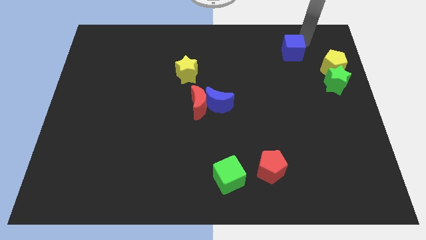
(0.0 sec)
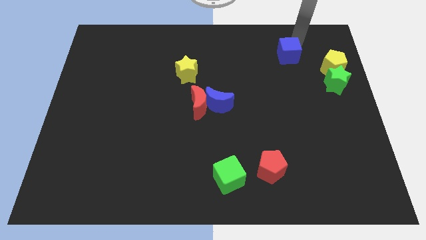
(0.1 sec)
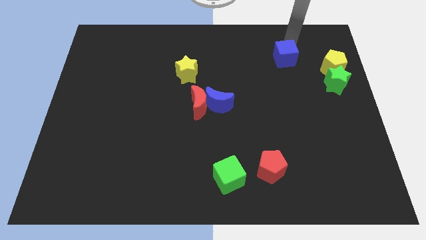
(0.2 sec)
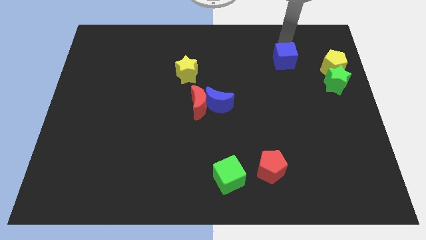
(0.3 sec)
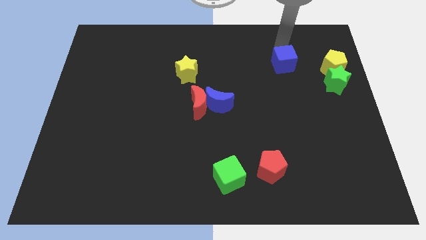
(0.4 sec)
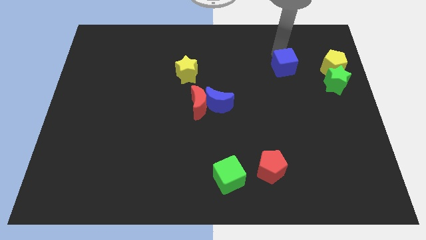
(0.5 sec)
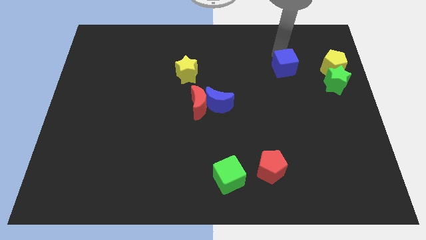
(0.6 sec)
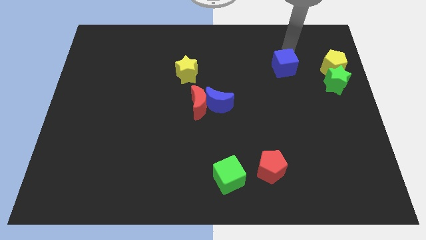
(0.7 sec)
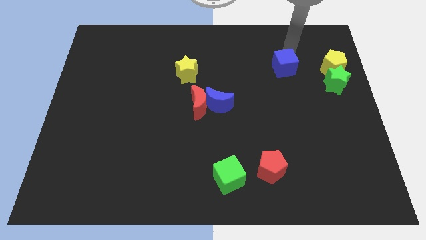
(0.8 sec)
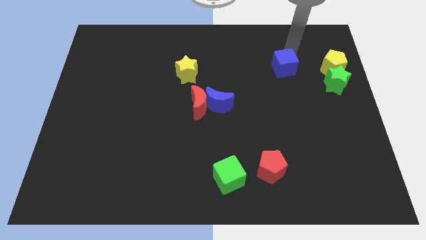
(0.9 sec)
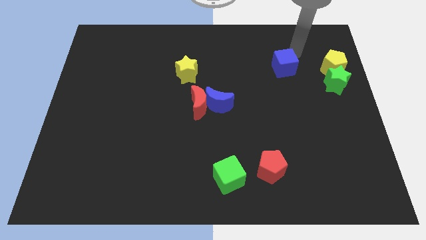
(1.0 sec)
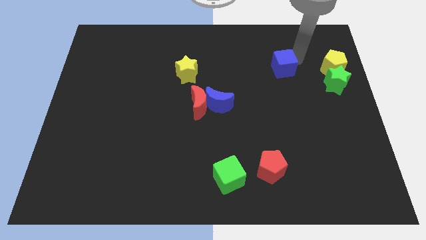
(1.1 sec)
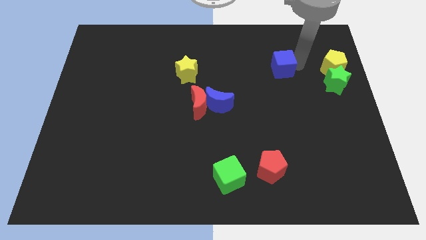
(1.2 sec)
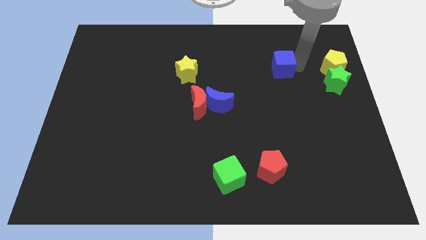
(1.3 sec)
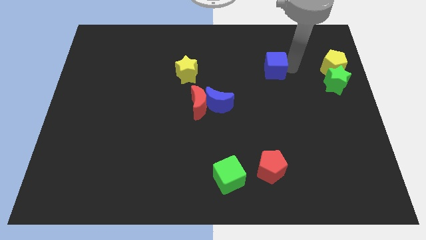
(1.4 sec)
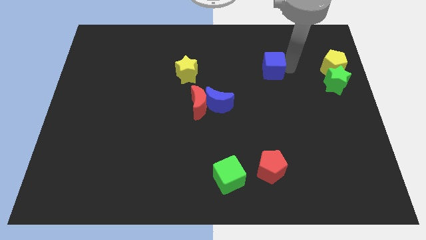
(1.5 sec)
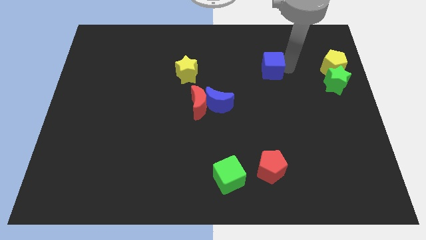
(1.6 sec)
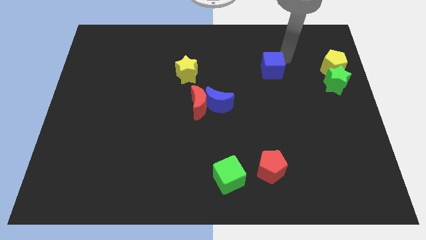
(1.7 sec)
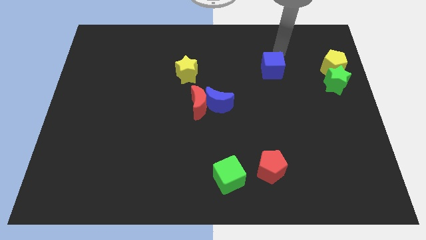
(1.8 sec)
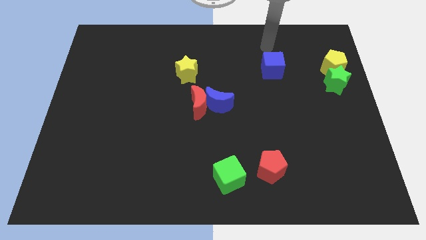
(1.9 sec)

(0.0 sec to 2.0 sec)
place the blue cube in between the yellow star and yellow pentagon

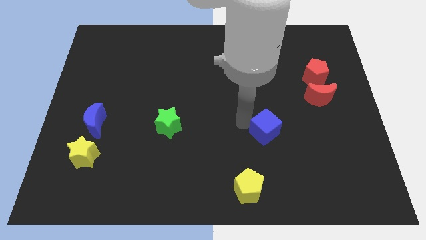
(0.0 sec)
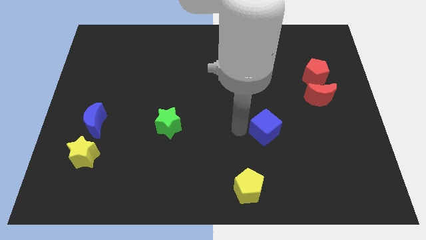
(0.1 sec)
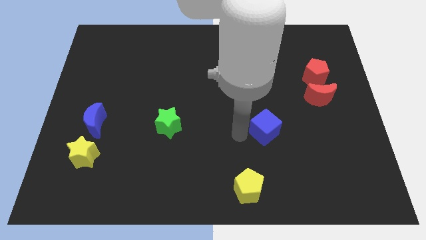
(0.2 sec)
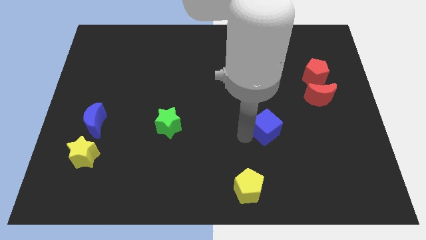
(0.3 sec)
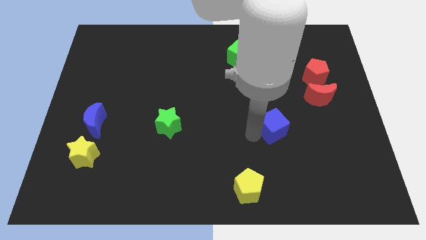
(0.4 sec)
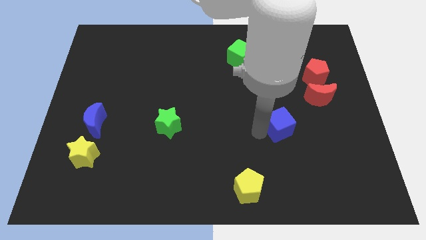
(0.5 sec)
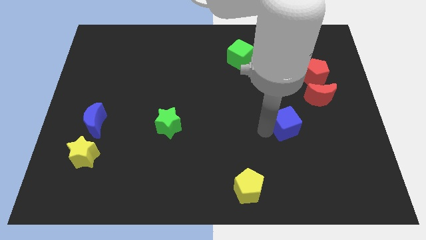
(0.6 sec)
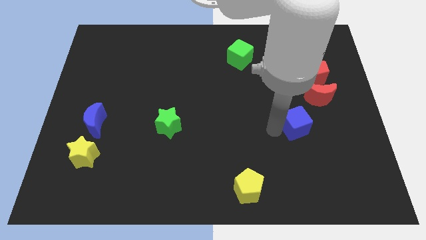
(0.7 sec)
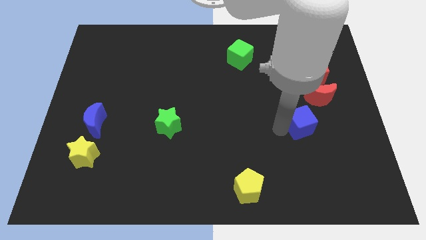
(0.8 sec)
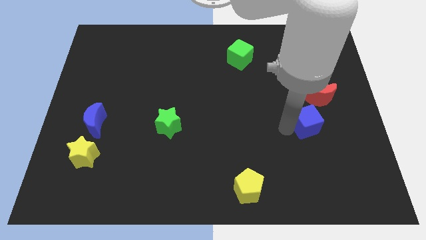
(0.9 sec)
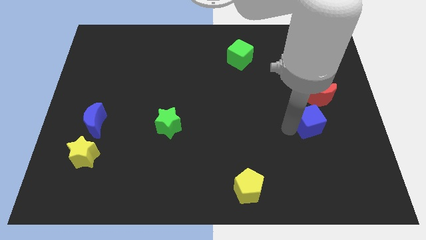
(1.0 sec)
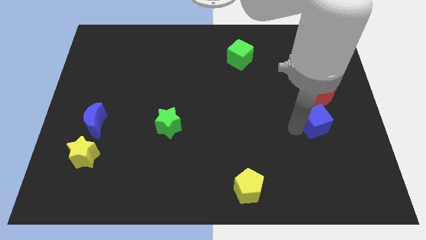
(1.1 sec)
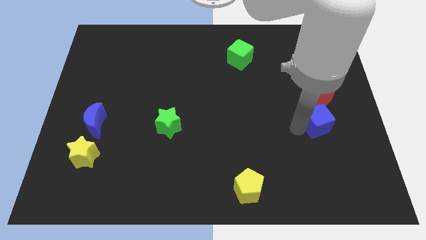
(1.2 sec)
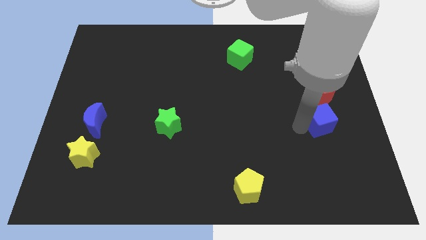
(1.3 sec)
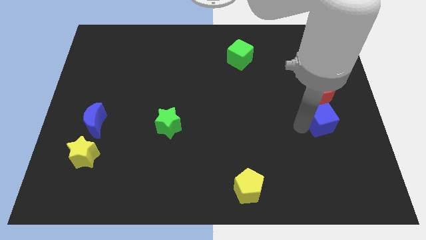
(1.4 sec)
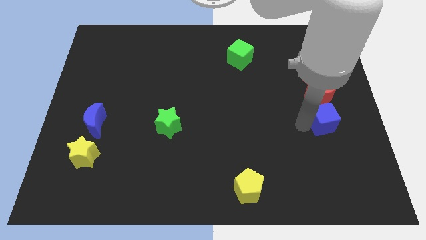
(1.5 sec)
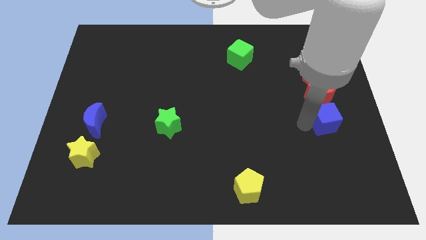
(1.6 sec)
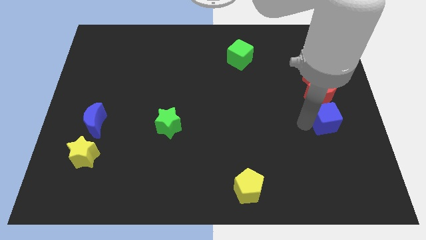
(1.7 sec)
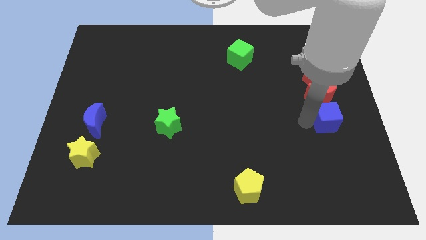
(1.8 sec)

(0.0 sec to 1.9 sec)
put the blue cube below the red crescent

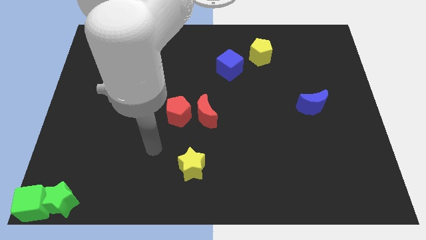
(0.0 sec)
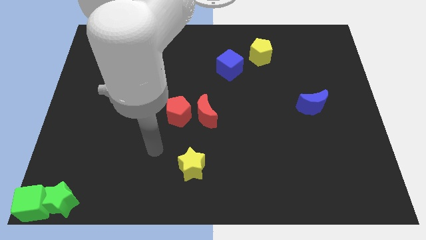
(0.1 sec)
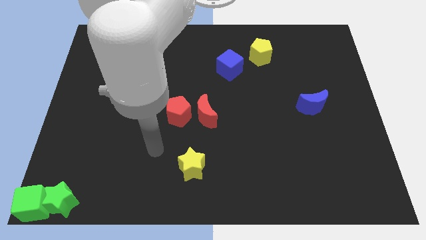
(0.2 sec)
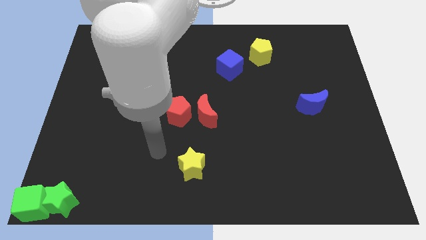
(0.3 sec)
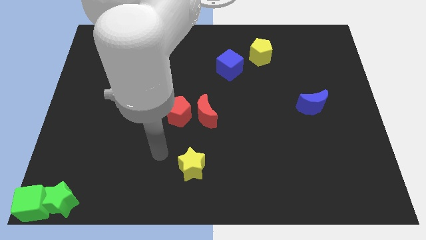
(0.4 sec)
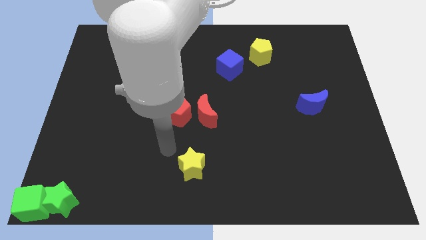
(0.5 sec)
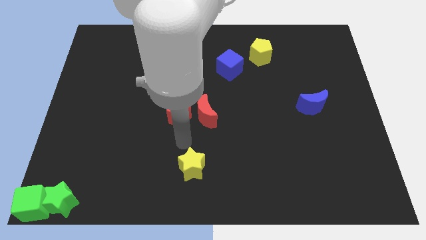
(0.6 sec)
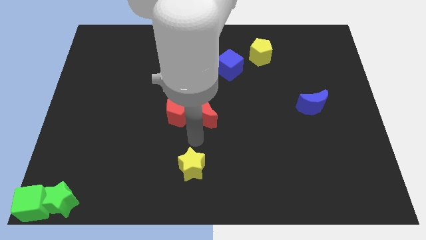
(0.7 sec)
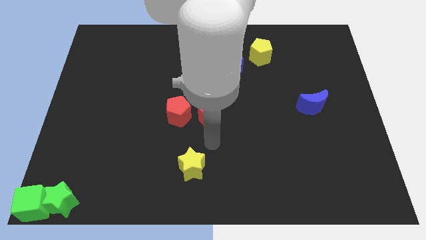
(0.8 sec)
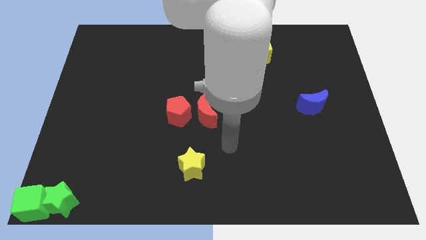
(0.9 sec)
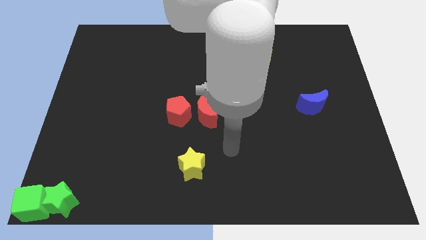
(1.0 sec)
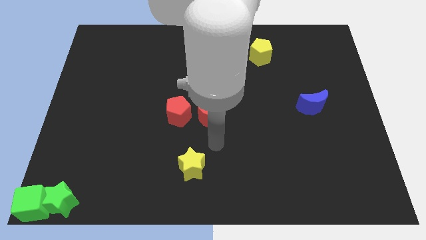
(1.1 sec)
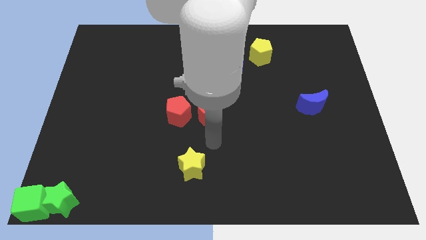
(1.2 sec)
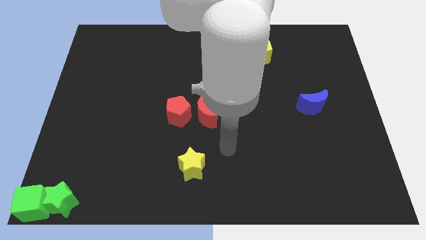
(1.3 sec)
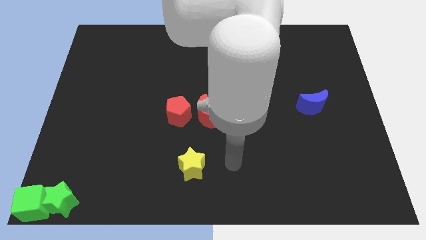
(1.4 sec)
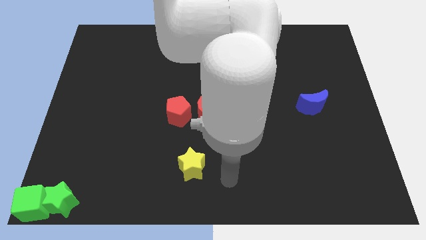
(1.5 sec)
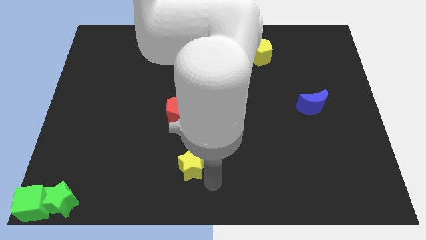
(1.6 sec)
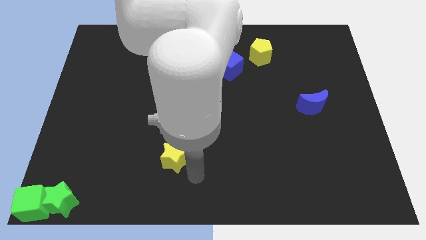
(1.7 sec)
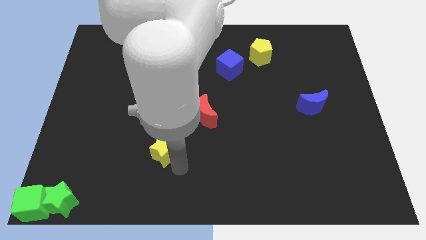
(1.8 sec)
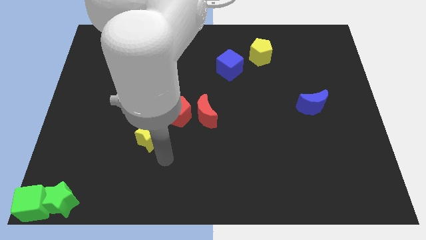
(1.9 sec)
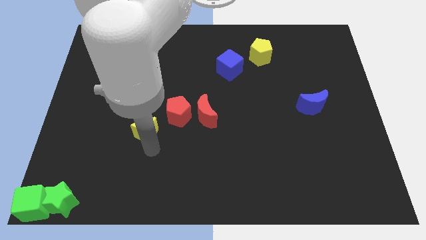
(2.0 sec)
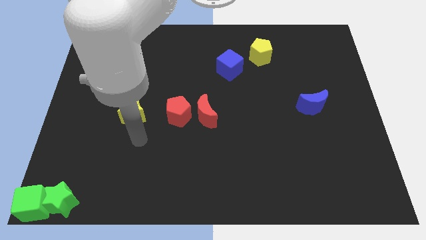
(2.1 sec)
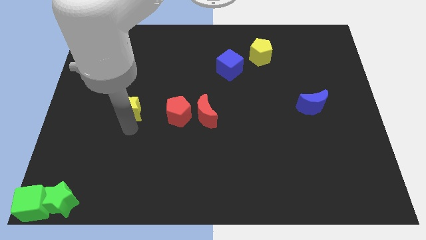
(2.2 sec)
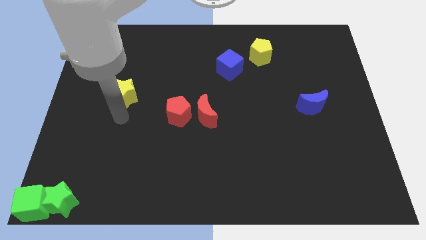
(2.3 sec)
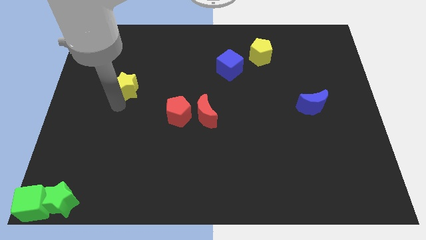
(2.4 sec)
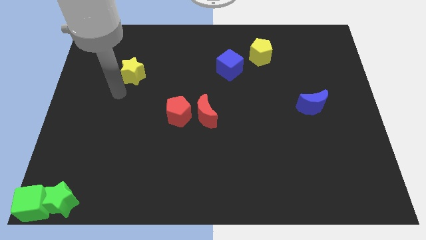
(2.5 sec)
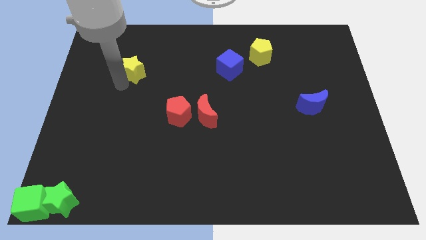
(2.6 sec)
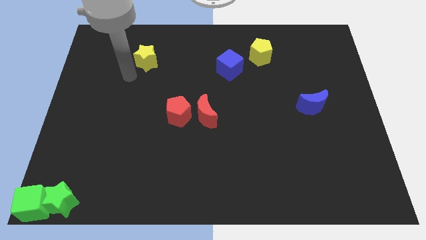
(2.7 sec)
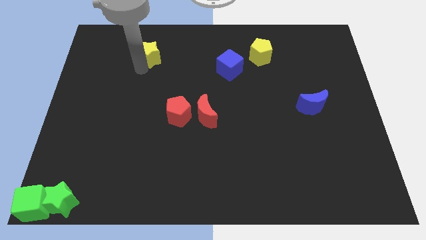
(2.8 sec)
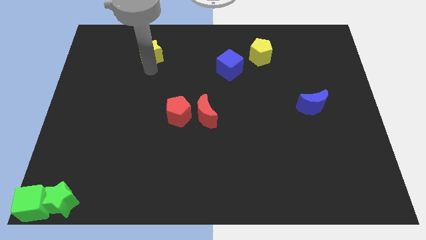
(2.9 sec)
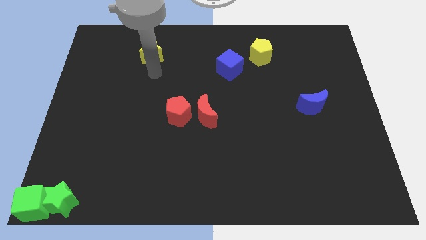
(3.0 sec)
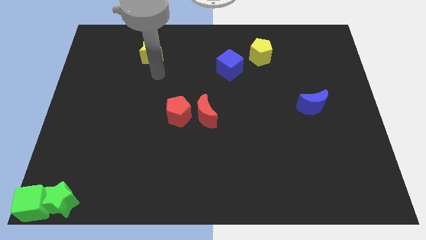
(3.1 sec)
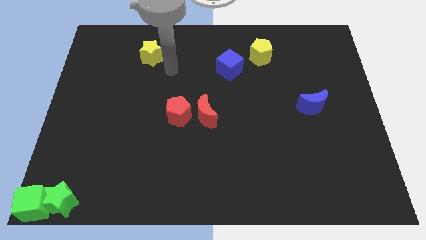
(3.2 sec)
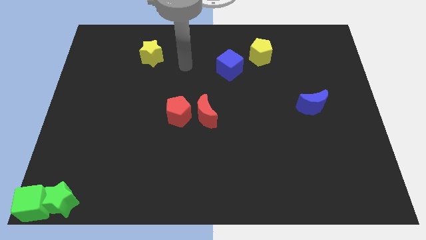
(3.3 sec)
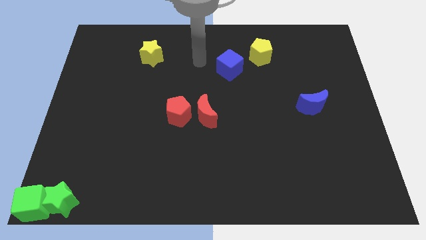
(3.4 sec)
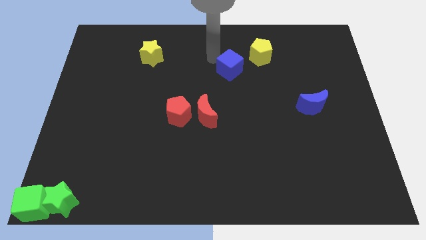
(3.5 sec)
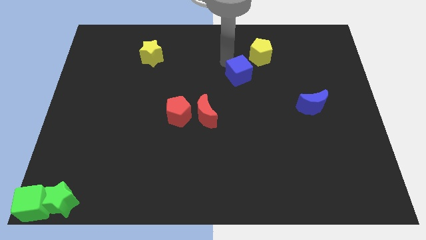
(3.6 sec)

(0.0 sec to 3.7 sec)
place the yellow star diagonal to the red pentagon

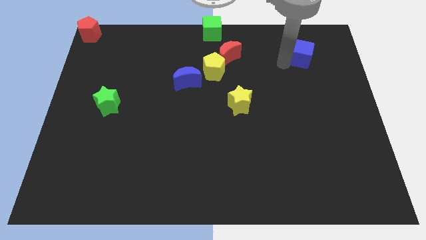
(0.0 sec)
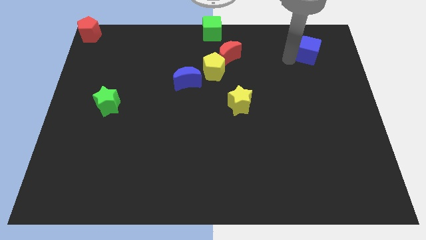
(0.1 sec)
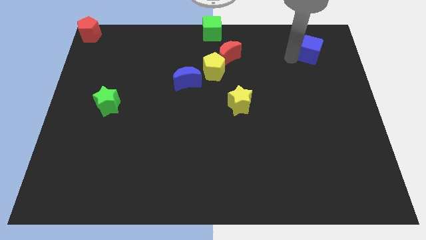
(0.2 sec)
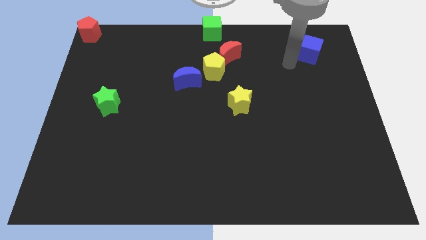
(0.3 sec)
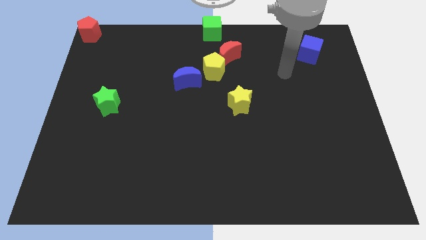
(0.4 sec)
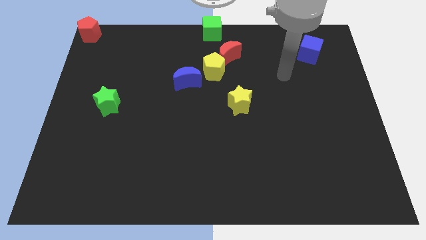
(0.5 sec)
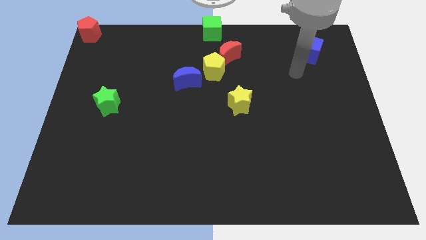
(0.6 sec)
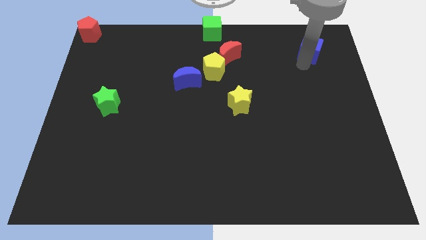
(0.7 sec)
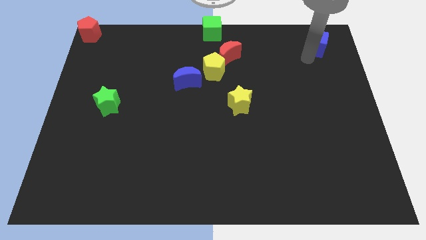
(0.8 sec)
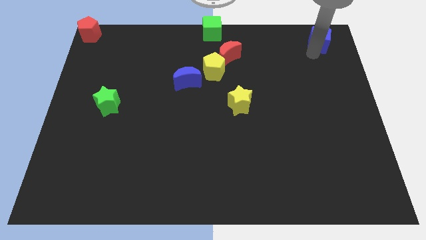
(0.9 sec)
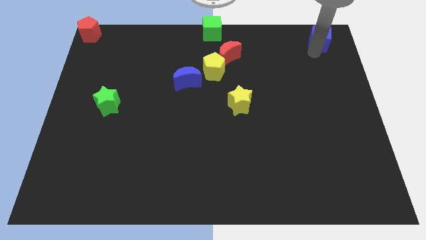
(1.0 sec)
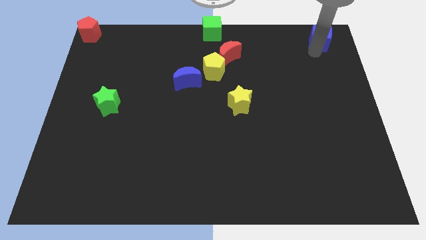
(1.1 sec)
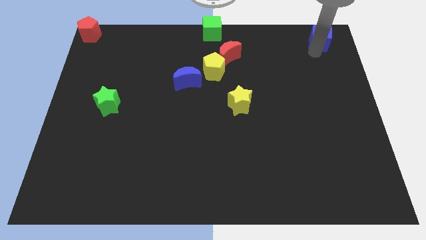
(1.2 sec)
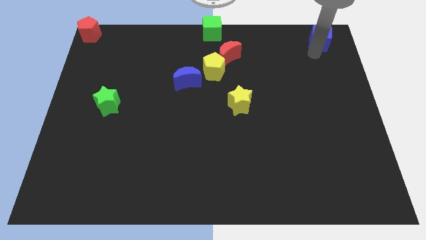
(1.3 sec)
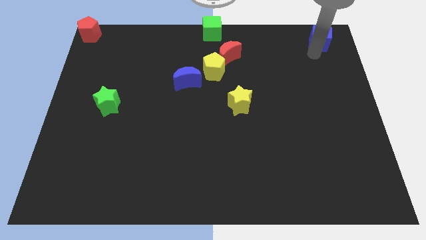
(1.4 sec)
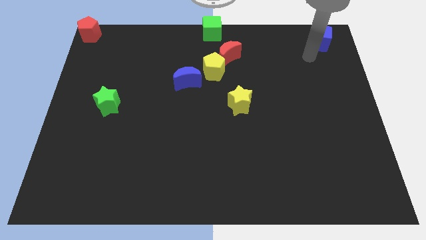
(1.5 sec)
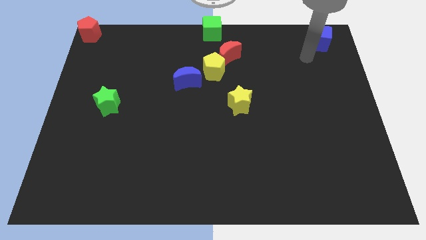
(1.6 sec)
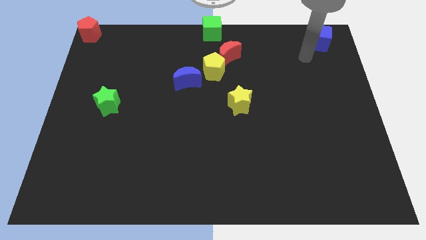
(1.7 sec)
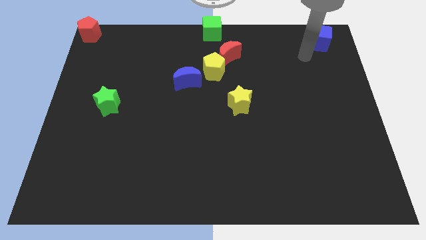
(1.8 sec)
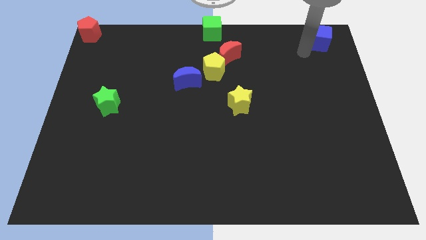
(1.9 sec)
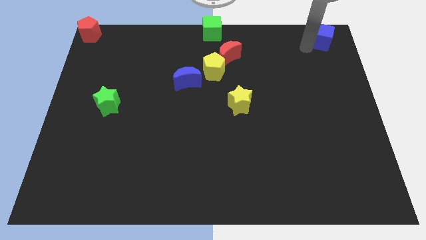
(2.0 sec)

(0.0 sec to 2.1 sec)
place the blue cube at the top right corner of the board
